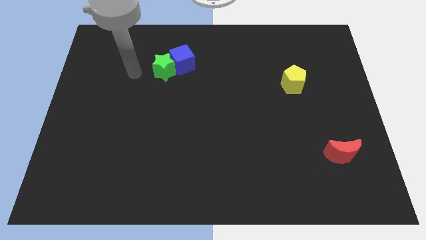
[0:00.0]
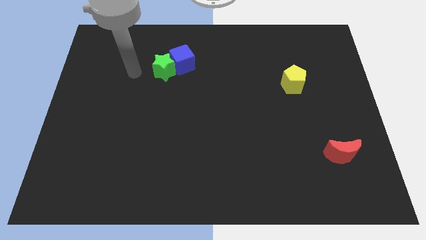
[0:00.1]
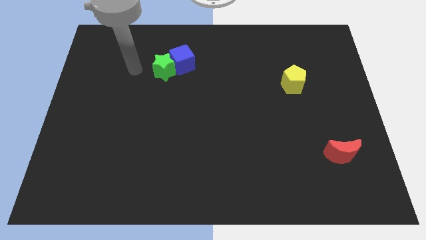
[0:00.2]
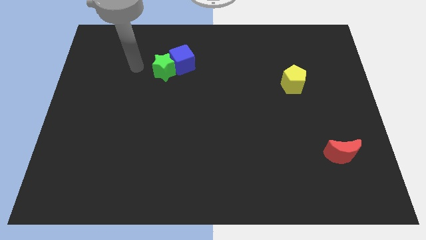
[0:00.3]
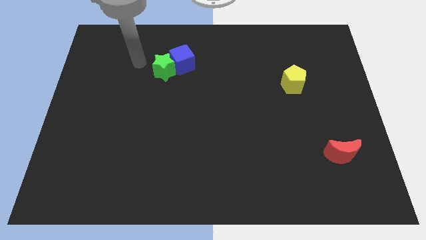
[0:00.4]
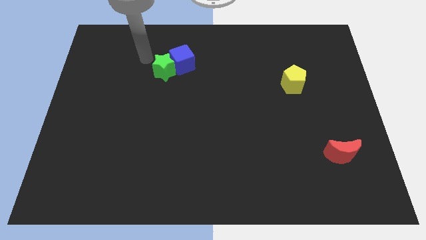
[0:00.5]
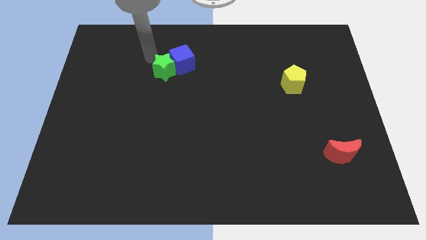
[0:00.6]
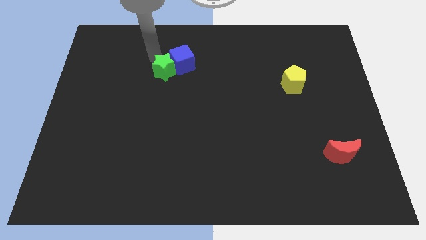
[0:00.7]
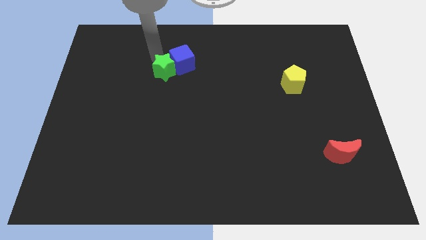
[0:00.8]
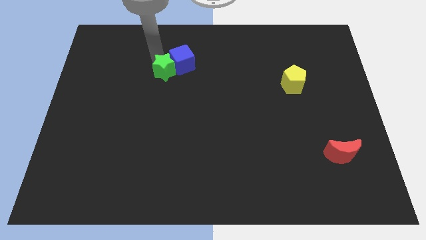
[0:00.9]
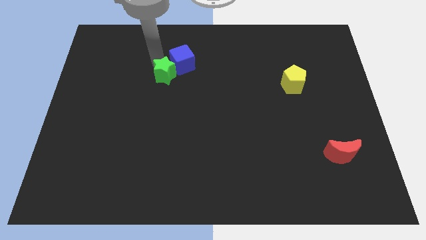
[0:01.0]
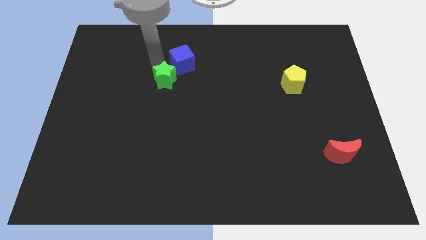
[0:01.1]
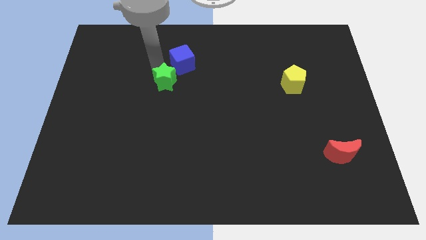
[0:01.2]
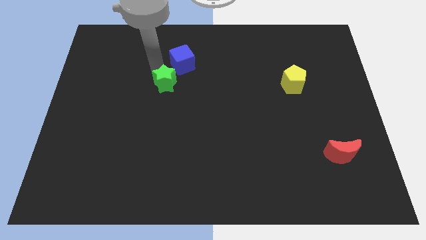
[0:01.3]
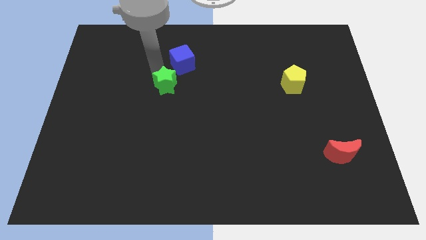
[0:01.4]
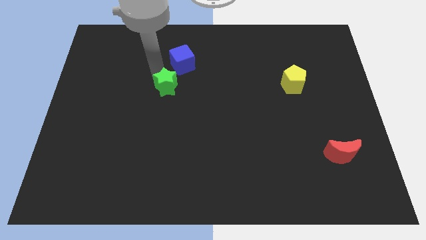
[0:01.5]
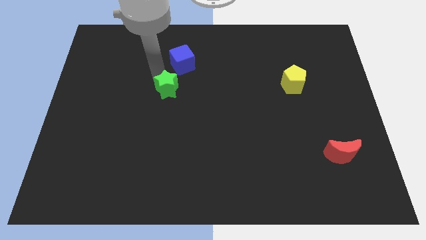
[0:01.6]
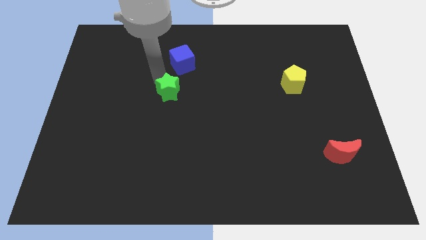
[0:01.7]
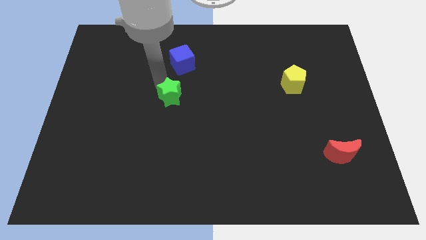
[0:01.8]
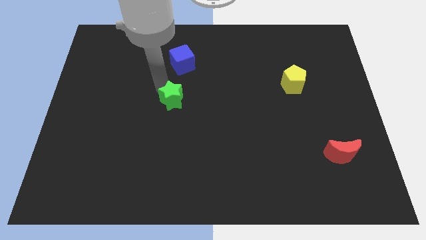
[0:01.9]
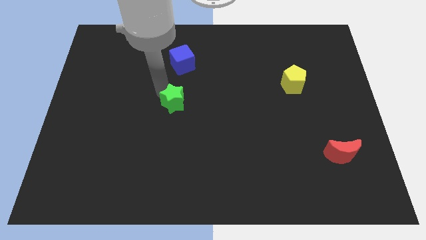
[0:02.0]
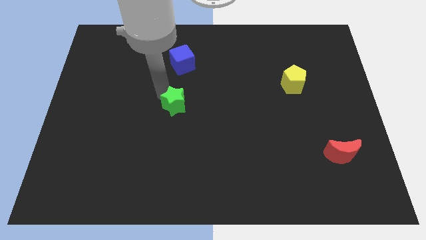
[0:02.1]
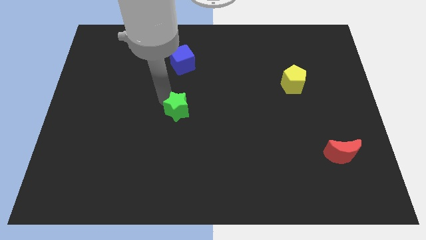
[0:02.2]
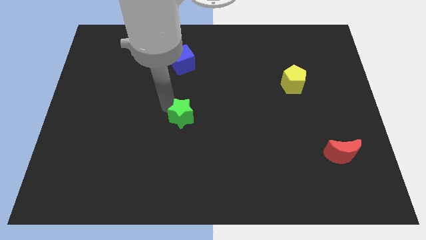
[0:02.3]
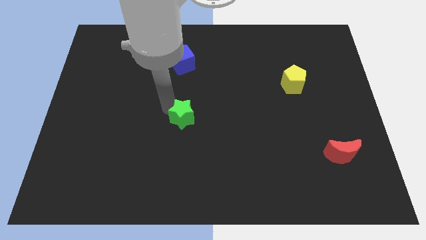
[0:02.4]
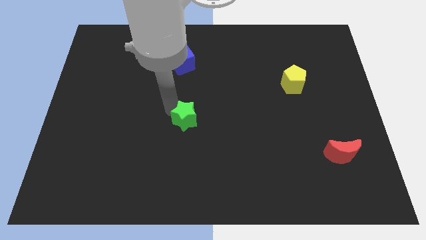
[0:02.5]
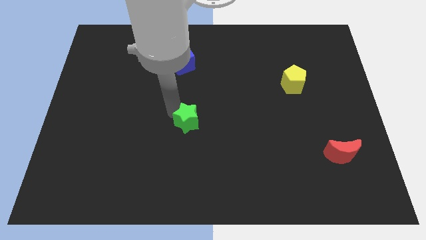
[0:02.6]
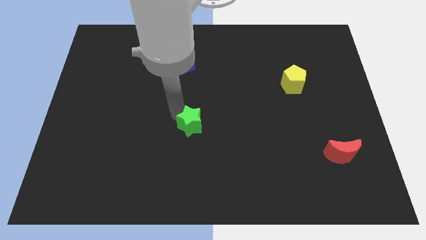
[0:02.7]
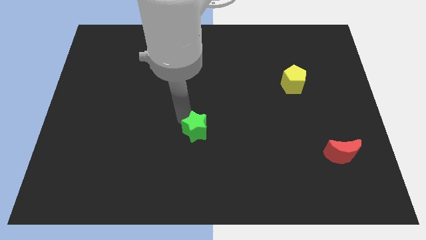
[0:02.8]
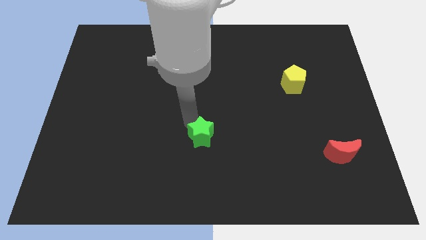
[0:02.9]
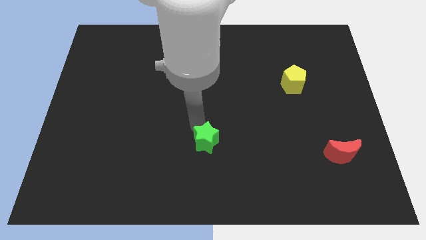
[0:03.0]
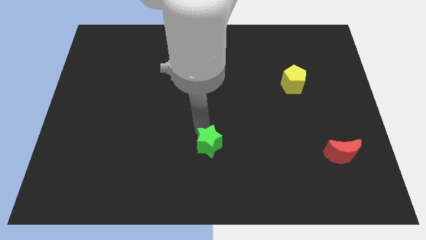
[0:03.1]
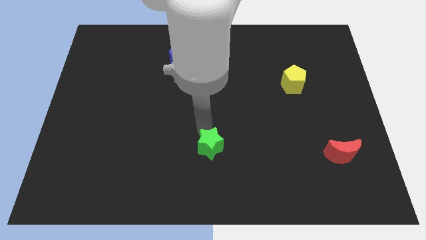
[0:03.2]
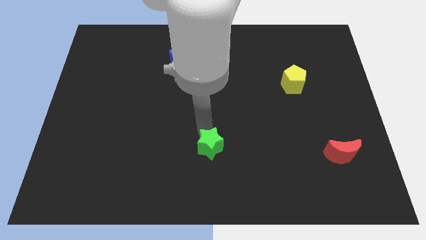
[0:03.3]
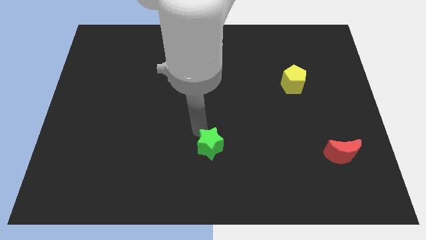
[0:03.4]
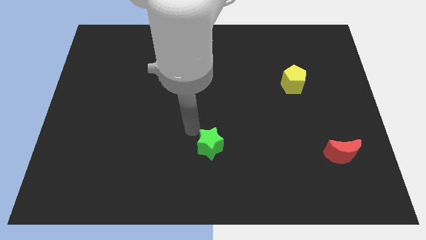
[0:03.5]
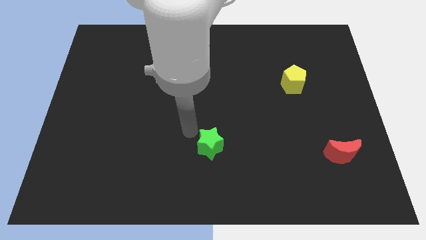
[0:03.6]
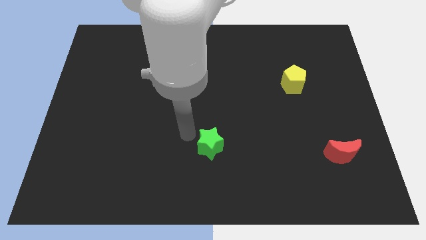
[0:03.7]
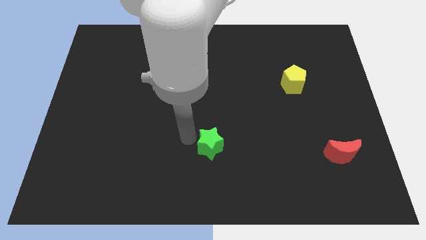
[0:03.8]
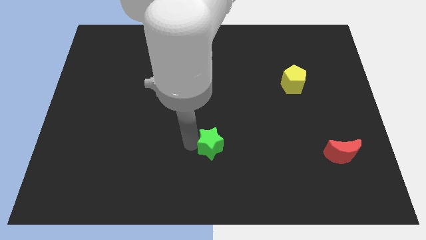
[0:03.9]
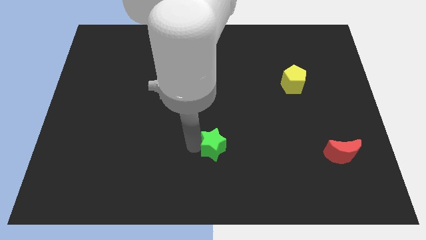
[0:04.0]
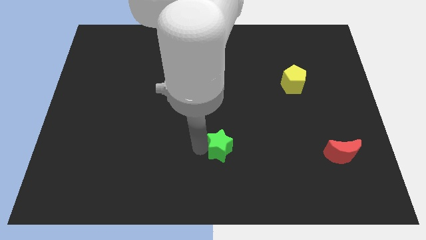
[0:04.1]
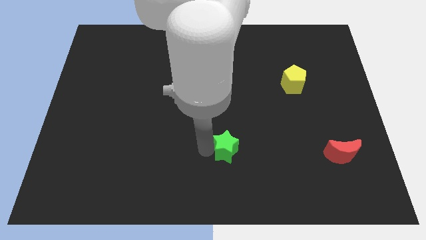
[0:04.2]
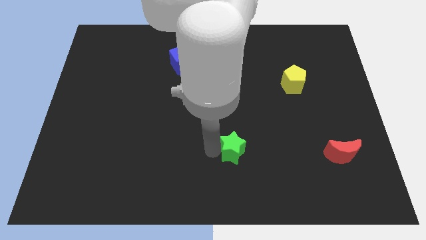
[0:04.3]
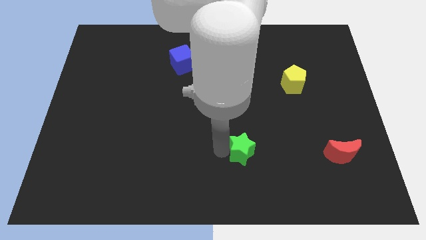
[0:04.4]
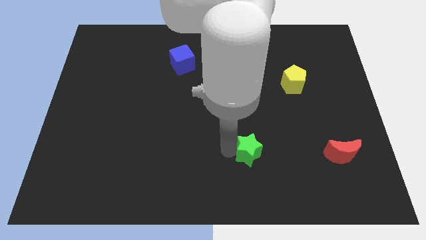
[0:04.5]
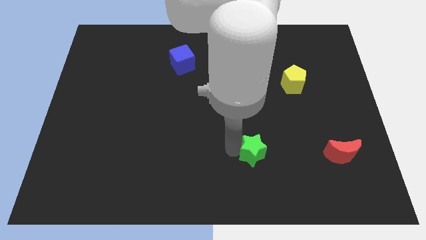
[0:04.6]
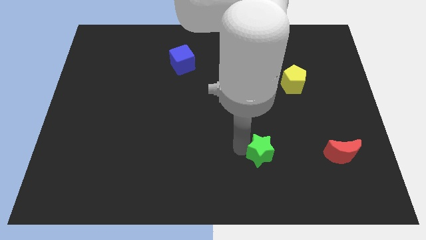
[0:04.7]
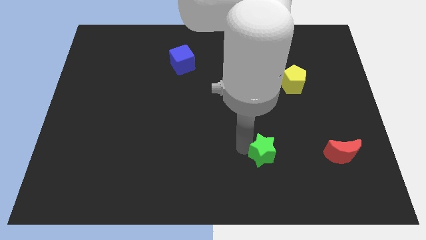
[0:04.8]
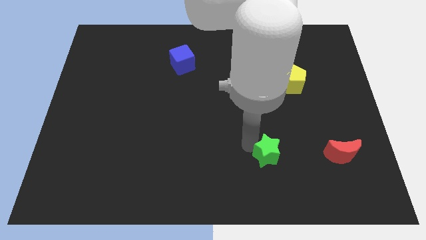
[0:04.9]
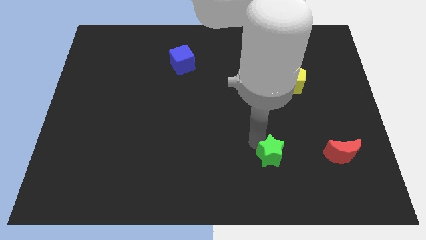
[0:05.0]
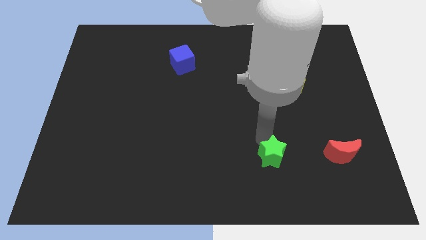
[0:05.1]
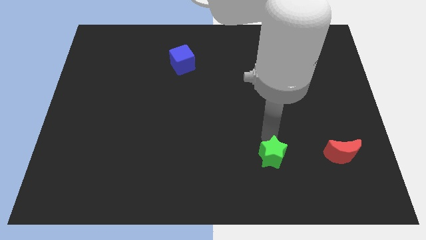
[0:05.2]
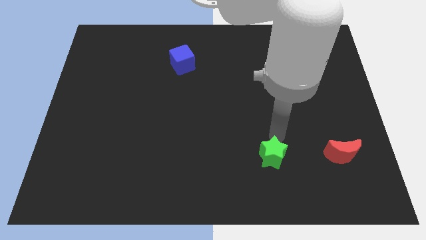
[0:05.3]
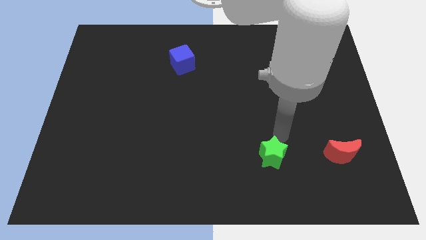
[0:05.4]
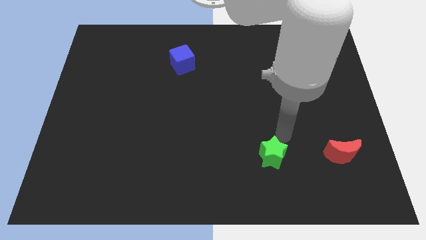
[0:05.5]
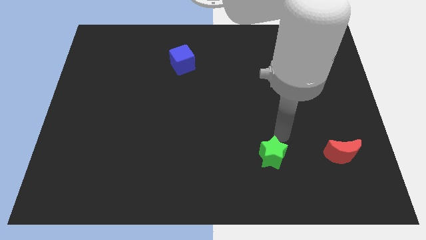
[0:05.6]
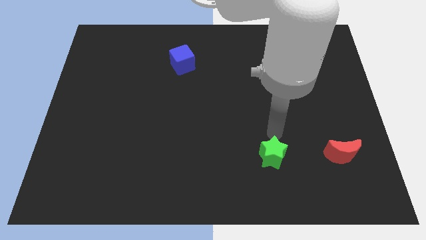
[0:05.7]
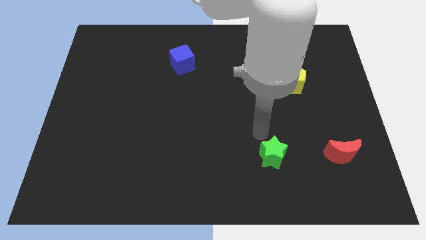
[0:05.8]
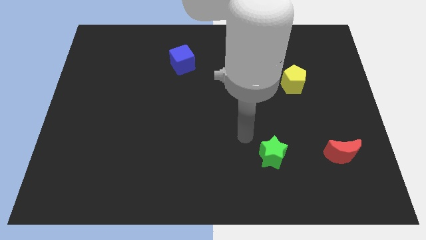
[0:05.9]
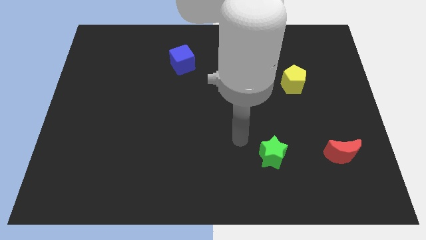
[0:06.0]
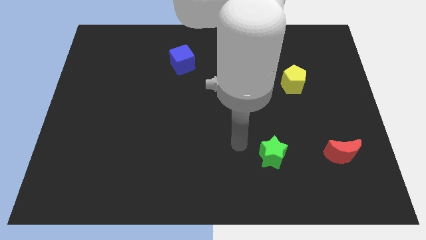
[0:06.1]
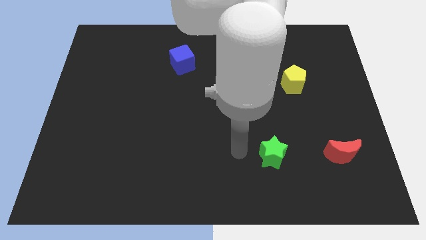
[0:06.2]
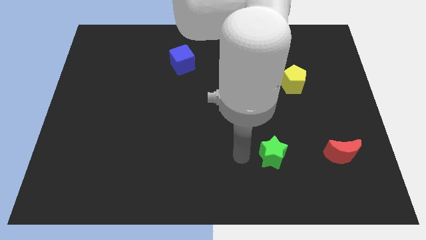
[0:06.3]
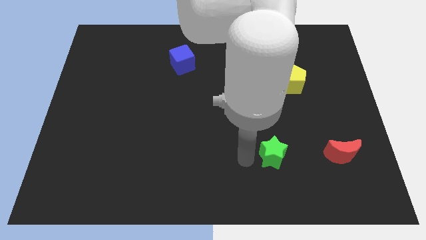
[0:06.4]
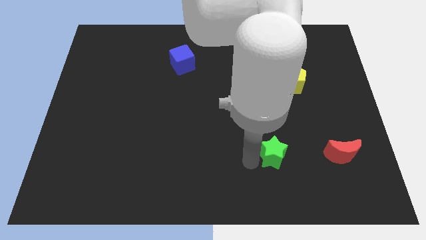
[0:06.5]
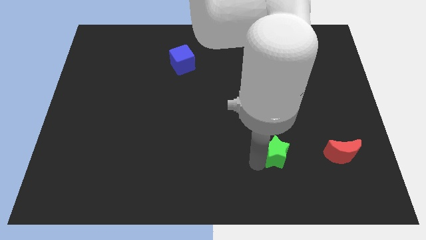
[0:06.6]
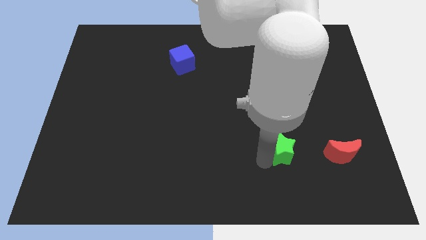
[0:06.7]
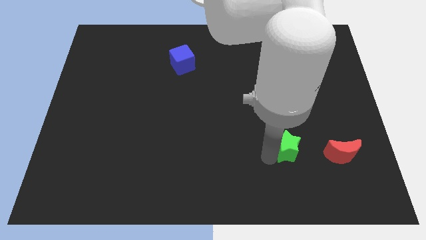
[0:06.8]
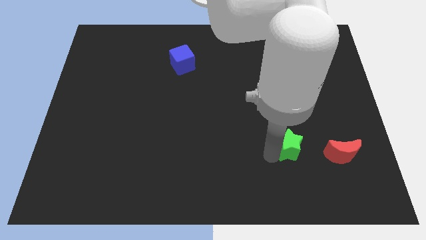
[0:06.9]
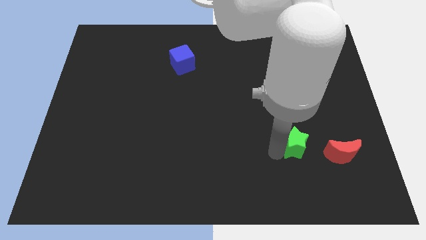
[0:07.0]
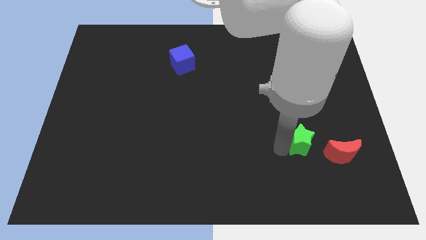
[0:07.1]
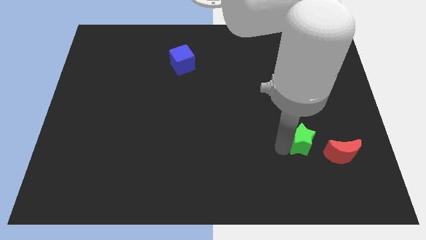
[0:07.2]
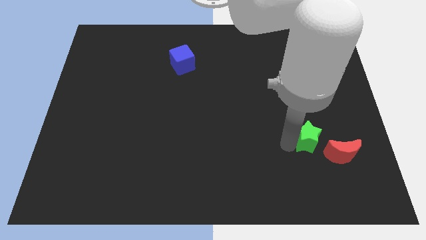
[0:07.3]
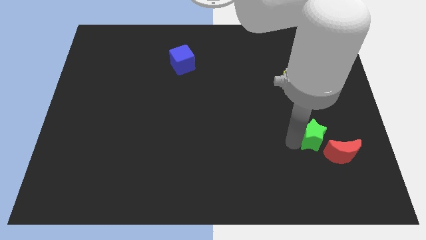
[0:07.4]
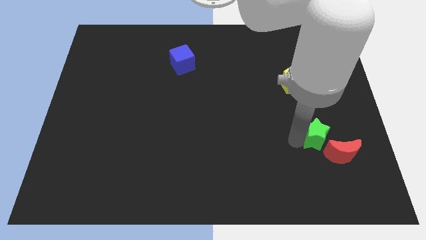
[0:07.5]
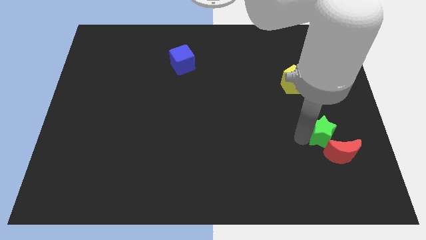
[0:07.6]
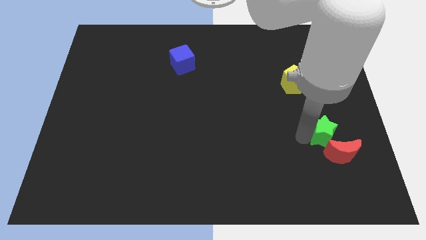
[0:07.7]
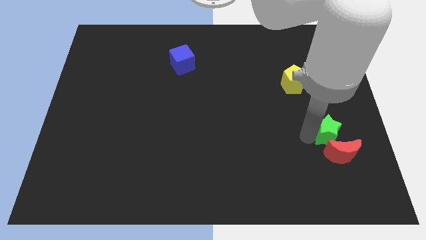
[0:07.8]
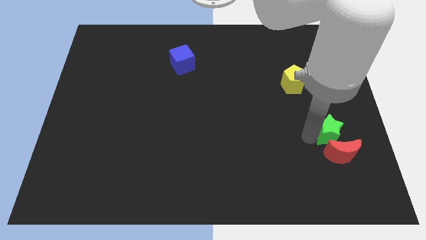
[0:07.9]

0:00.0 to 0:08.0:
put the green star towards the moon

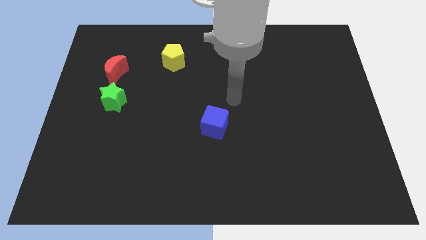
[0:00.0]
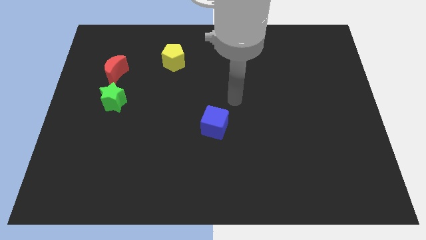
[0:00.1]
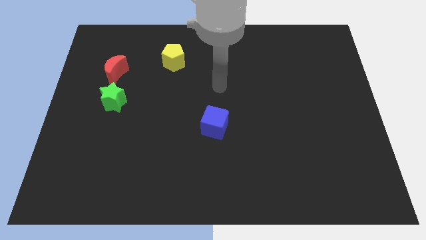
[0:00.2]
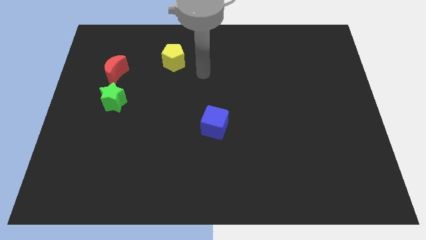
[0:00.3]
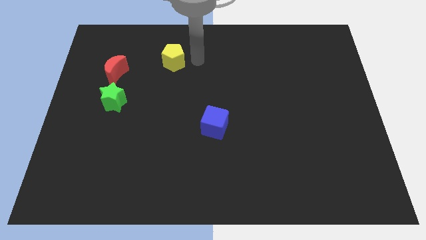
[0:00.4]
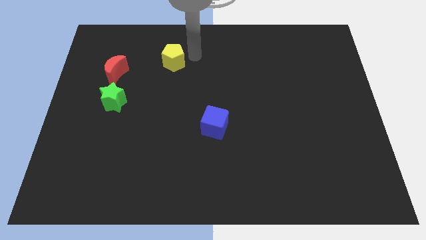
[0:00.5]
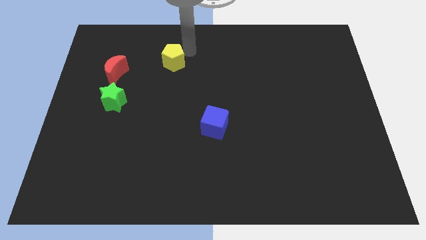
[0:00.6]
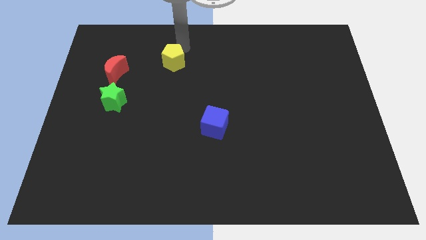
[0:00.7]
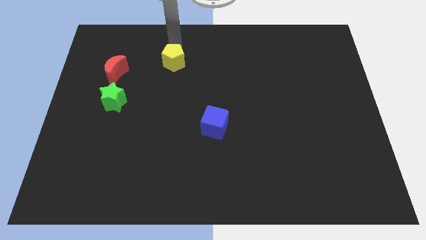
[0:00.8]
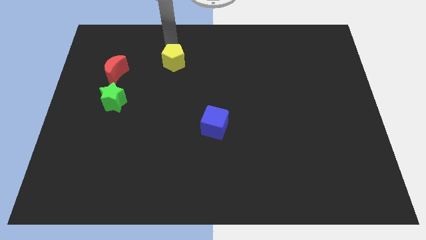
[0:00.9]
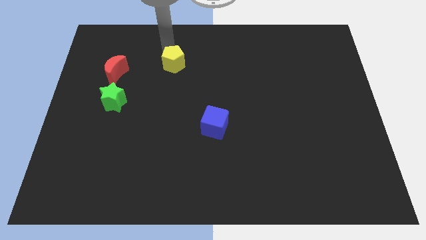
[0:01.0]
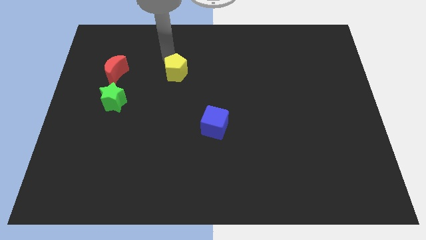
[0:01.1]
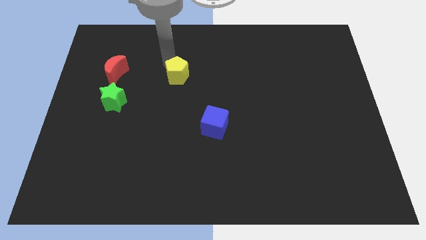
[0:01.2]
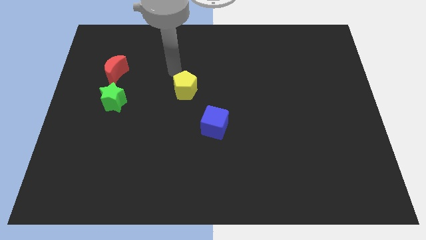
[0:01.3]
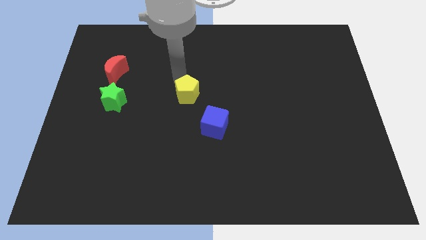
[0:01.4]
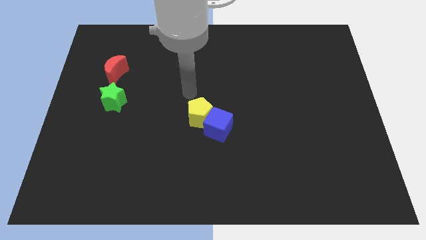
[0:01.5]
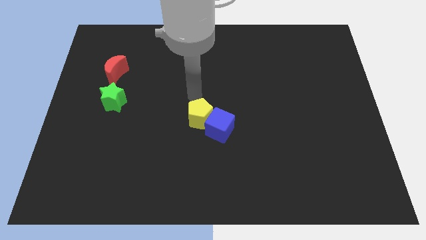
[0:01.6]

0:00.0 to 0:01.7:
move the yellow block to the blue cube
